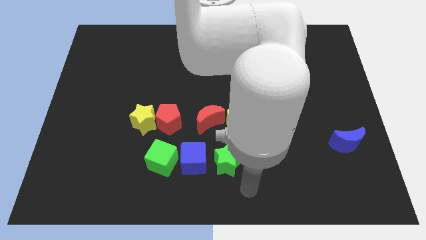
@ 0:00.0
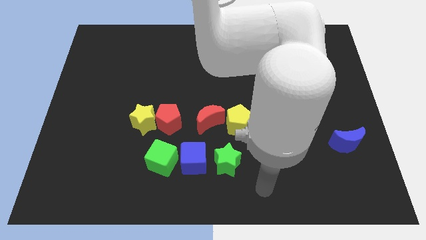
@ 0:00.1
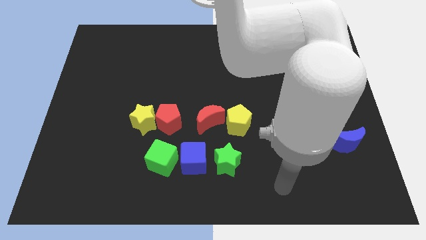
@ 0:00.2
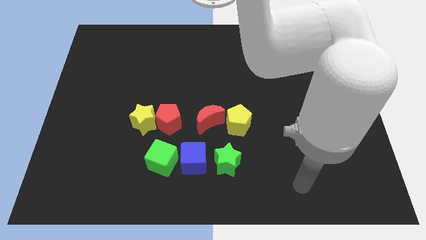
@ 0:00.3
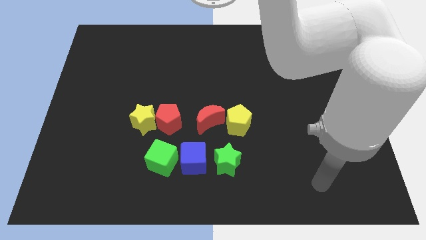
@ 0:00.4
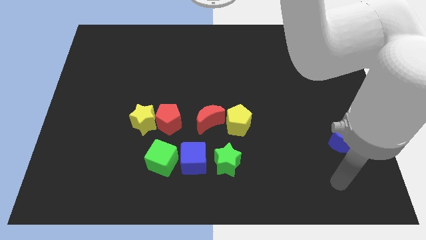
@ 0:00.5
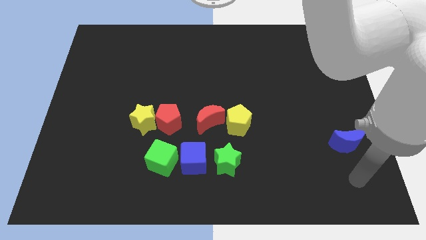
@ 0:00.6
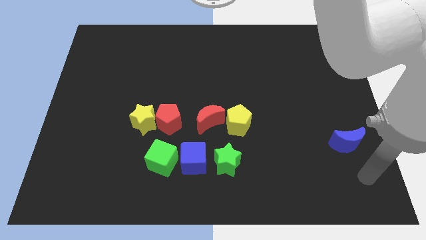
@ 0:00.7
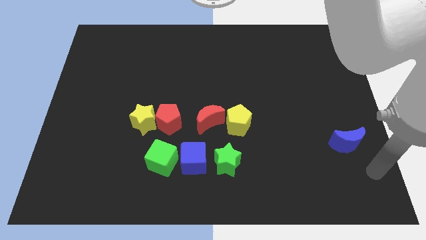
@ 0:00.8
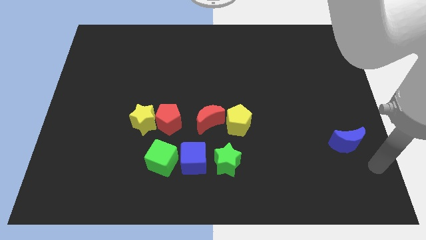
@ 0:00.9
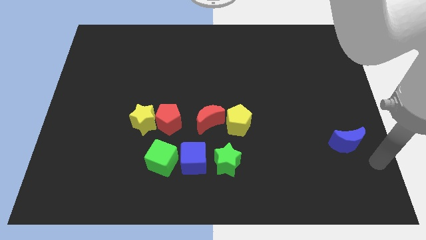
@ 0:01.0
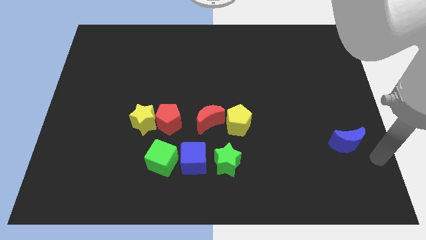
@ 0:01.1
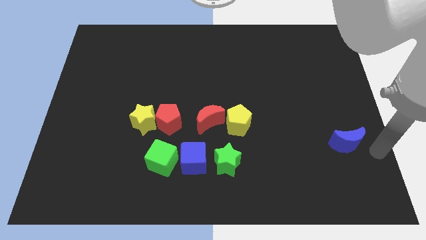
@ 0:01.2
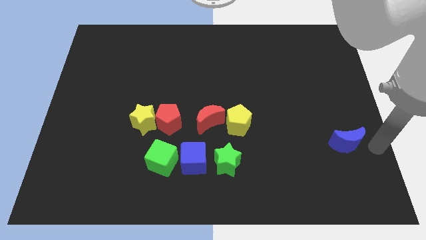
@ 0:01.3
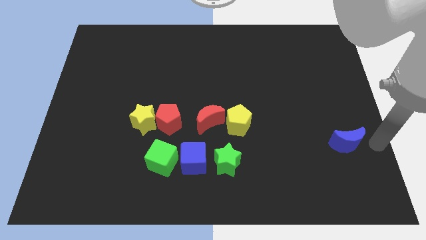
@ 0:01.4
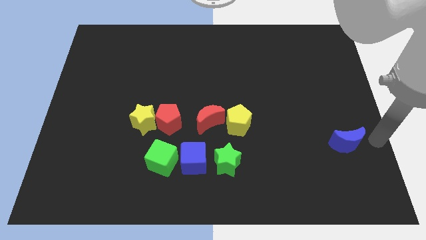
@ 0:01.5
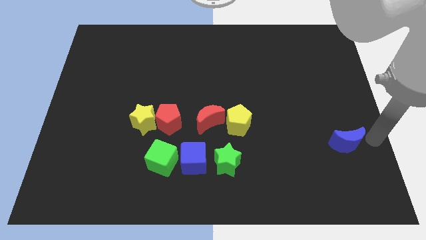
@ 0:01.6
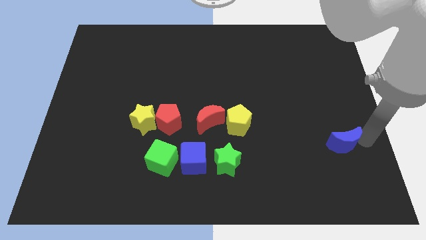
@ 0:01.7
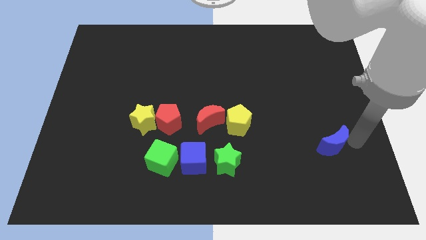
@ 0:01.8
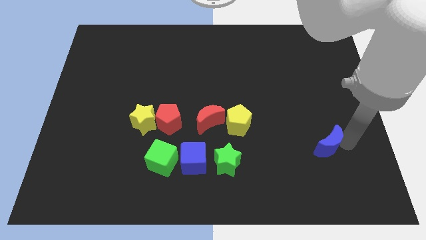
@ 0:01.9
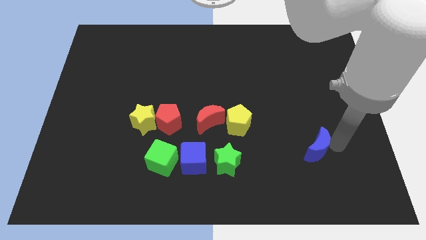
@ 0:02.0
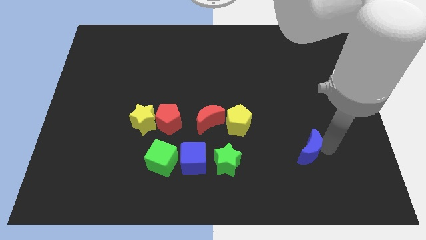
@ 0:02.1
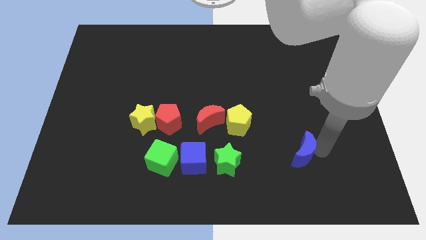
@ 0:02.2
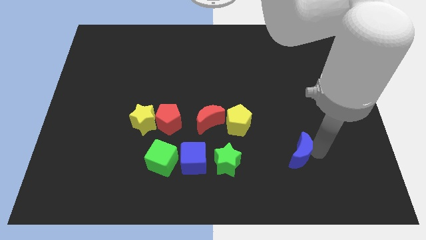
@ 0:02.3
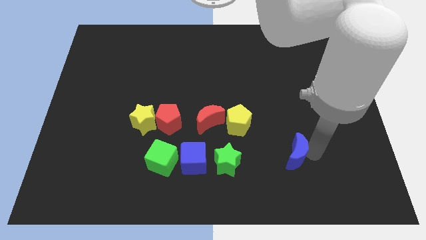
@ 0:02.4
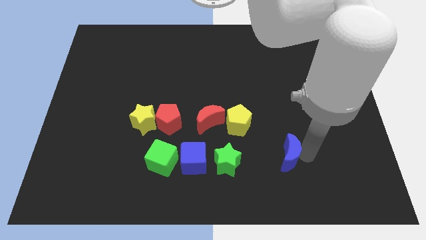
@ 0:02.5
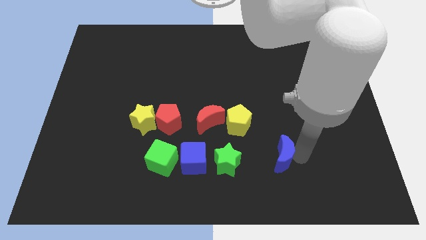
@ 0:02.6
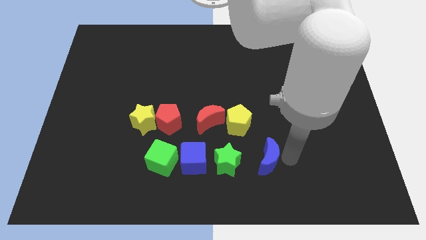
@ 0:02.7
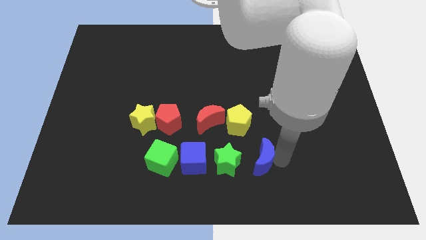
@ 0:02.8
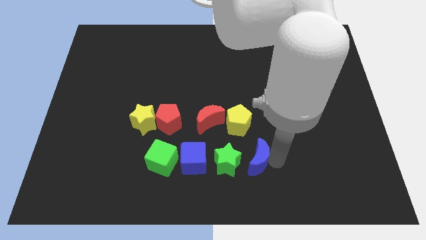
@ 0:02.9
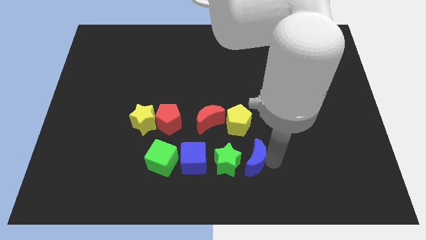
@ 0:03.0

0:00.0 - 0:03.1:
place the blue moon to the right of the green star

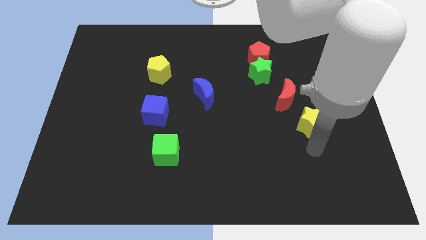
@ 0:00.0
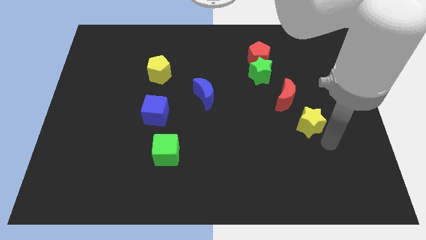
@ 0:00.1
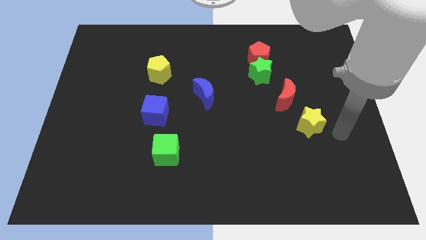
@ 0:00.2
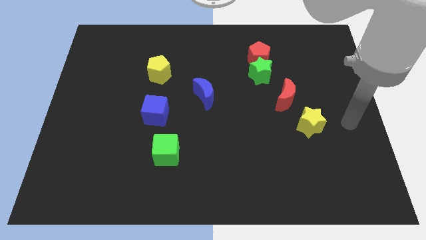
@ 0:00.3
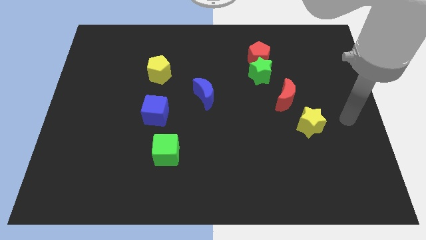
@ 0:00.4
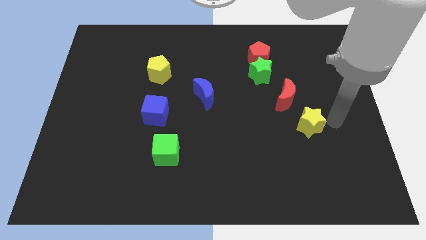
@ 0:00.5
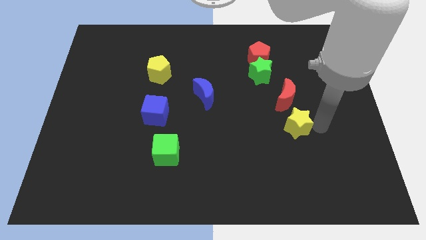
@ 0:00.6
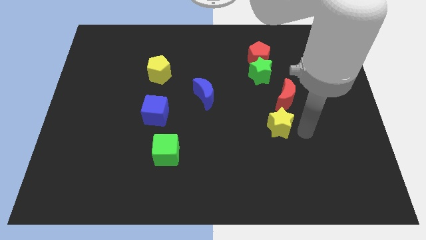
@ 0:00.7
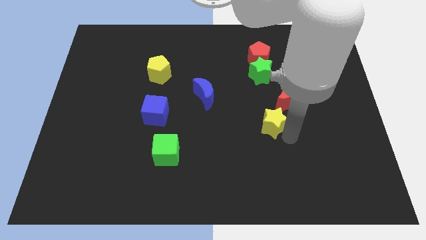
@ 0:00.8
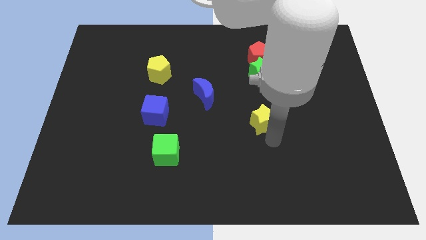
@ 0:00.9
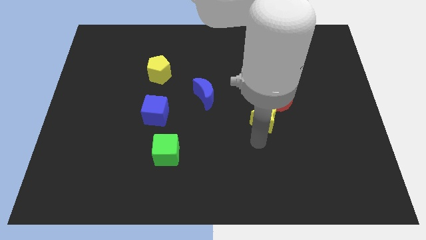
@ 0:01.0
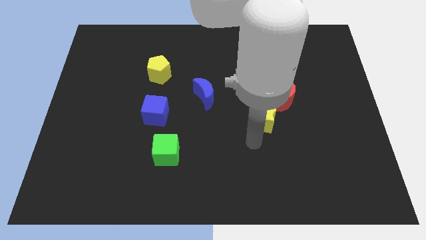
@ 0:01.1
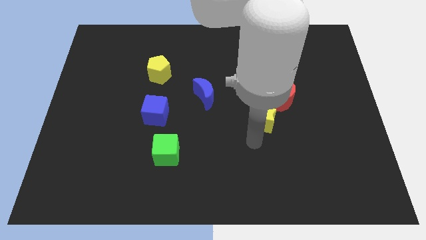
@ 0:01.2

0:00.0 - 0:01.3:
move the yellow to the bottom of the red crescent

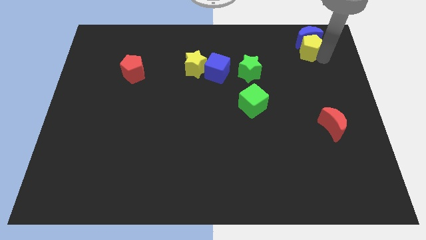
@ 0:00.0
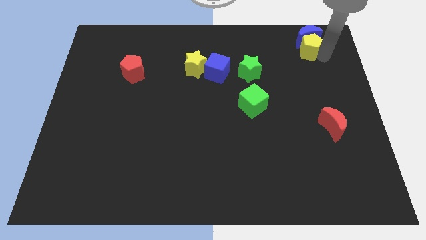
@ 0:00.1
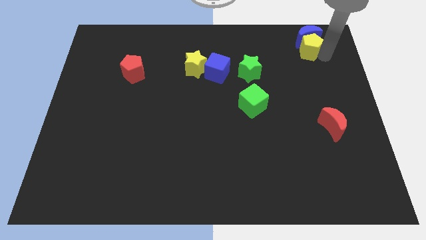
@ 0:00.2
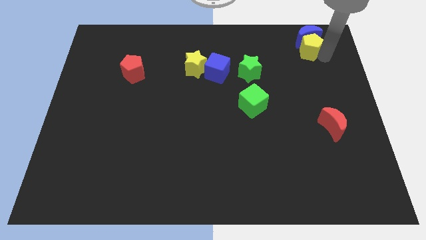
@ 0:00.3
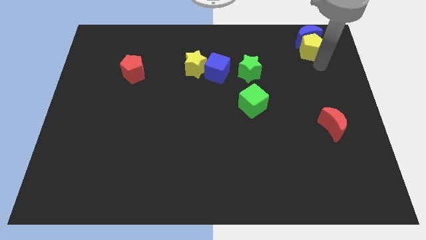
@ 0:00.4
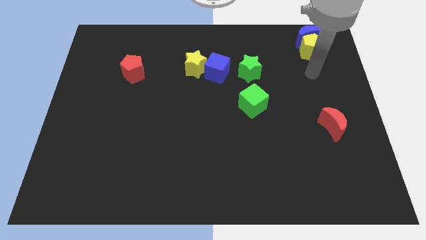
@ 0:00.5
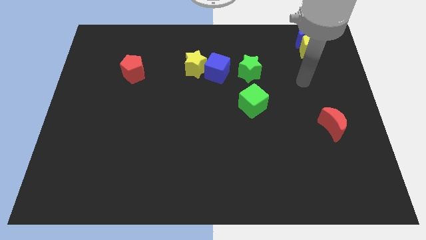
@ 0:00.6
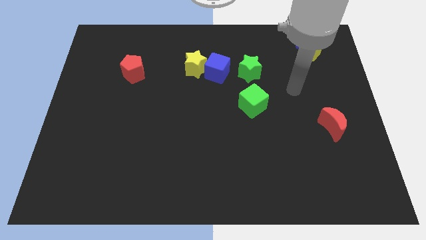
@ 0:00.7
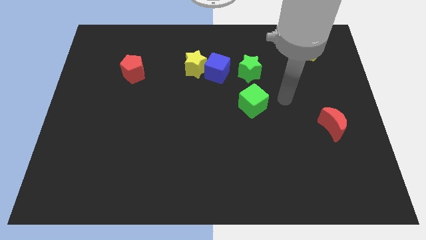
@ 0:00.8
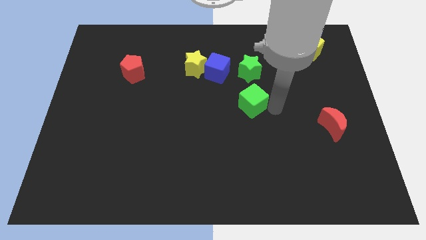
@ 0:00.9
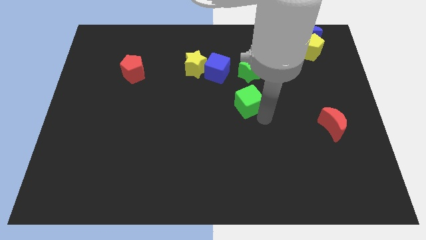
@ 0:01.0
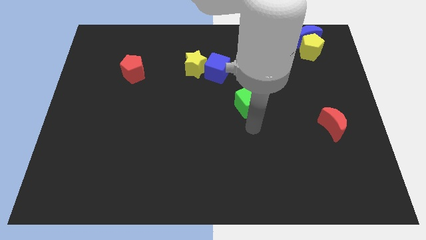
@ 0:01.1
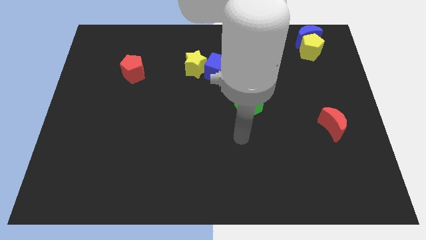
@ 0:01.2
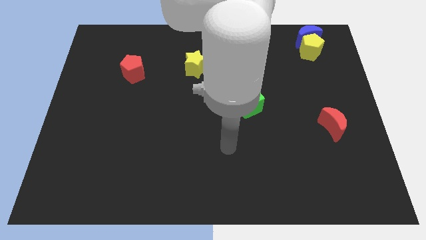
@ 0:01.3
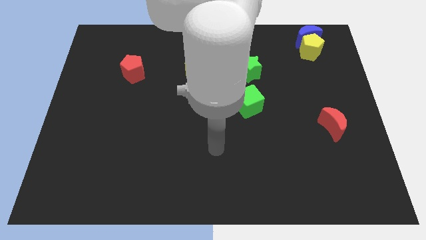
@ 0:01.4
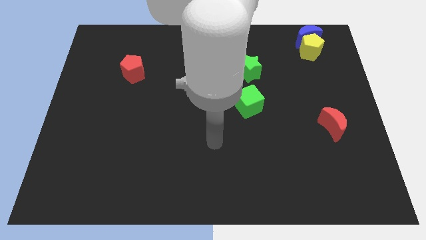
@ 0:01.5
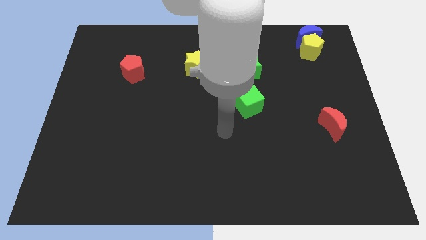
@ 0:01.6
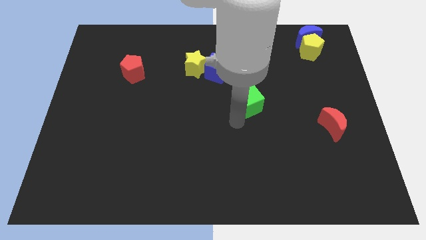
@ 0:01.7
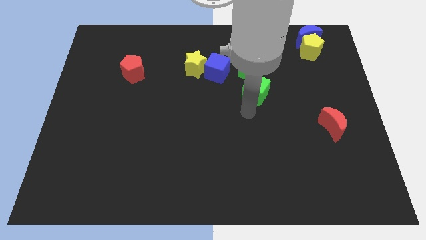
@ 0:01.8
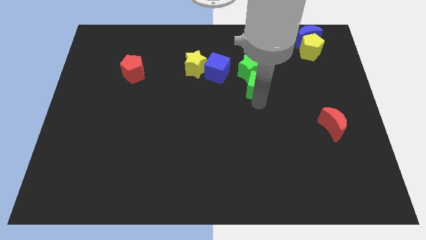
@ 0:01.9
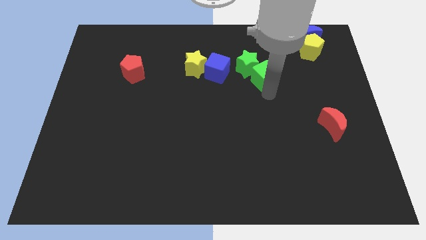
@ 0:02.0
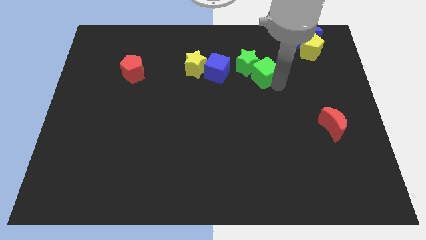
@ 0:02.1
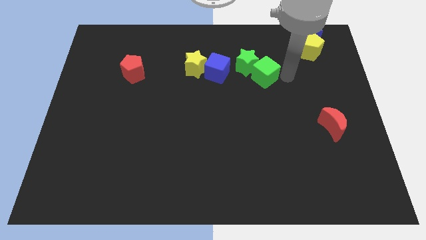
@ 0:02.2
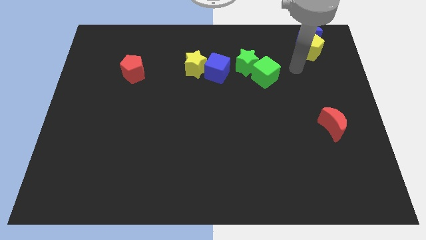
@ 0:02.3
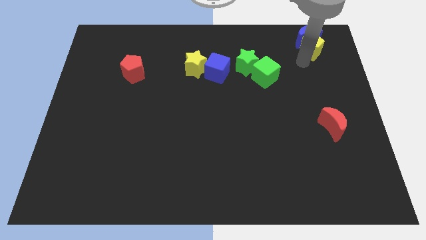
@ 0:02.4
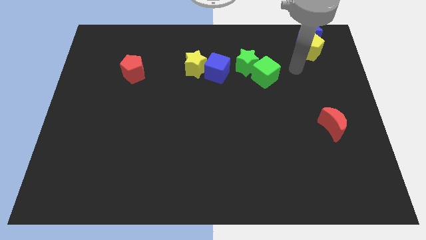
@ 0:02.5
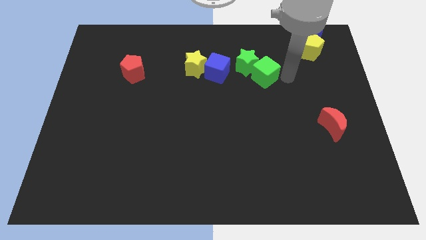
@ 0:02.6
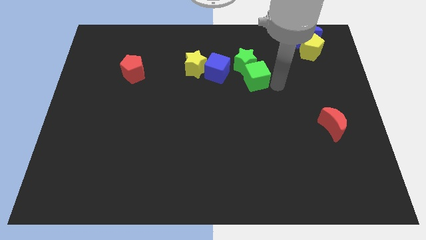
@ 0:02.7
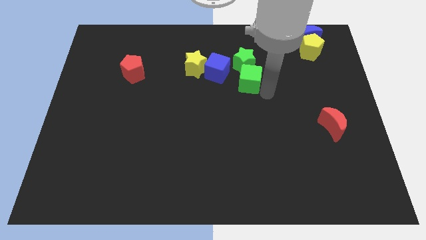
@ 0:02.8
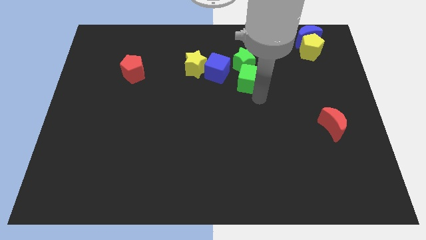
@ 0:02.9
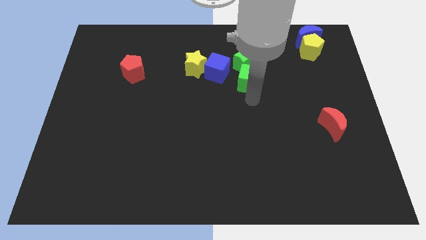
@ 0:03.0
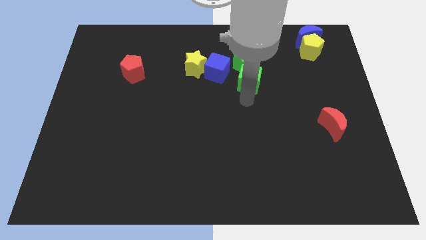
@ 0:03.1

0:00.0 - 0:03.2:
move green cube and green star right to blue cube

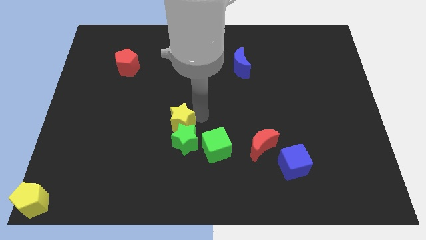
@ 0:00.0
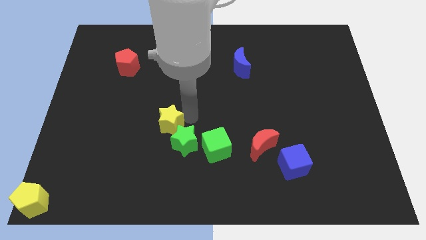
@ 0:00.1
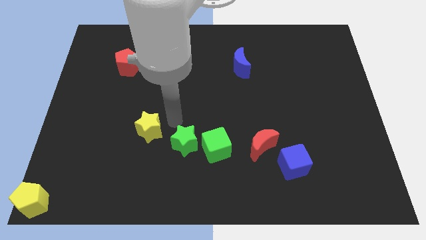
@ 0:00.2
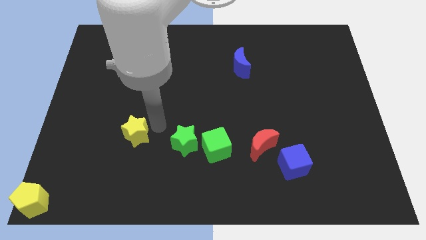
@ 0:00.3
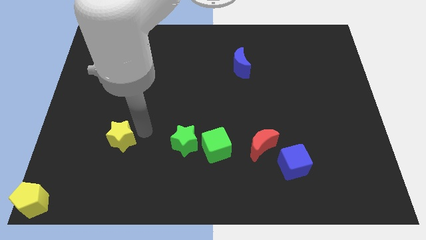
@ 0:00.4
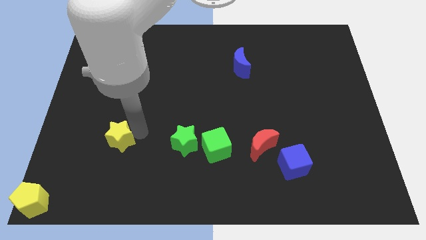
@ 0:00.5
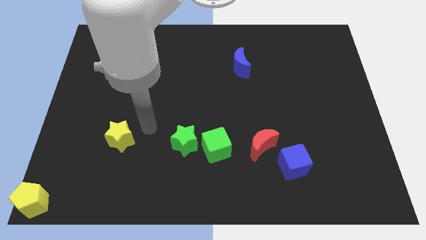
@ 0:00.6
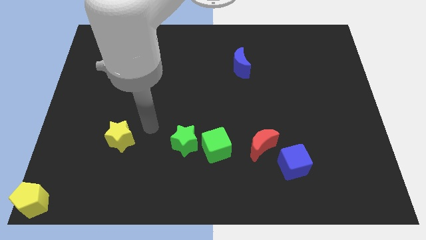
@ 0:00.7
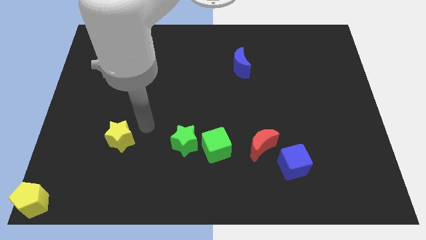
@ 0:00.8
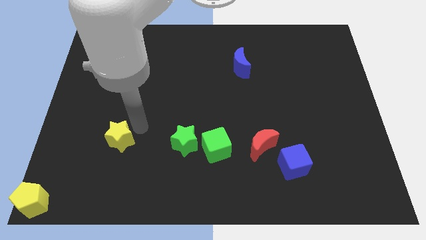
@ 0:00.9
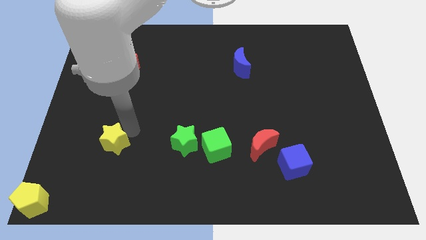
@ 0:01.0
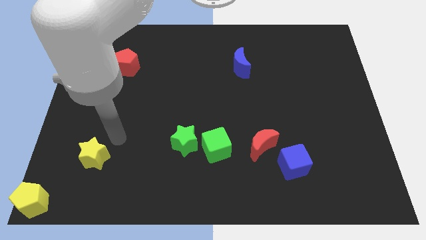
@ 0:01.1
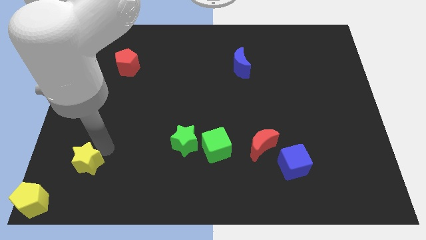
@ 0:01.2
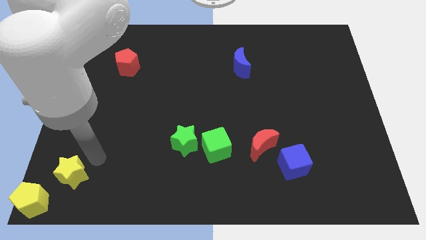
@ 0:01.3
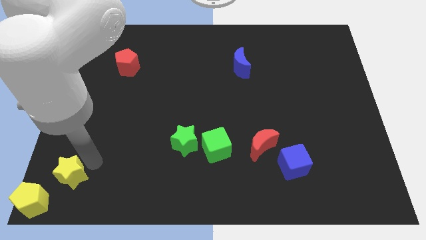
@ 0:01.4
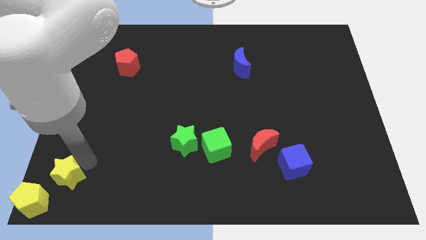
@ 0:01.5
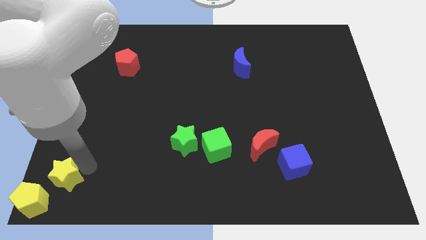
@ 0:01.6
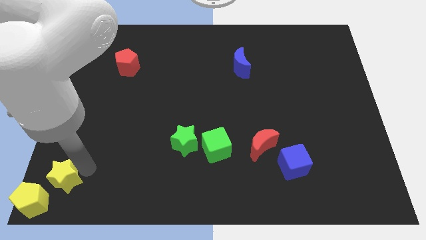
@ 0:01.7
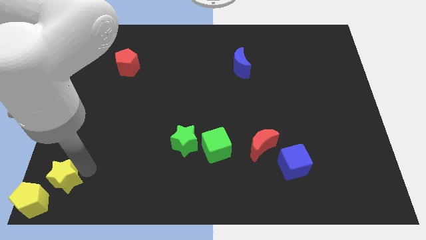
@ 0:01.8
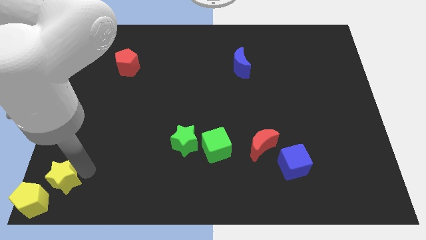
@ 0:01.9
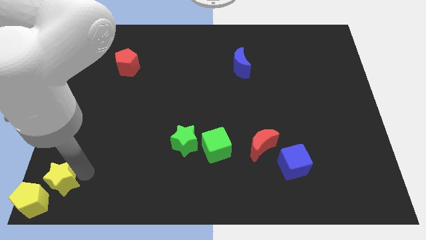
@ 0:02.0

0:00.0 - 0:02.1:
move the yellow star to the bottom left of the board
